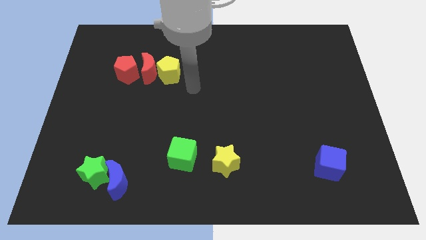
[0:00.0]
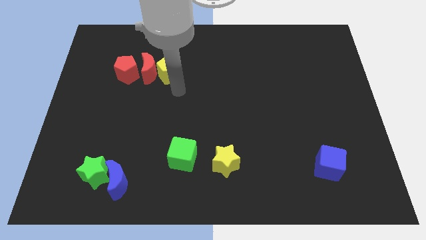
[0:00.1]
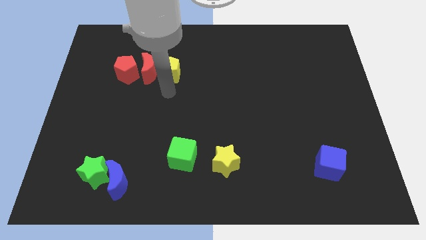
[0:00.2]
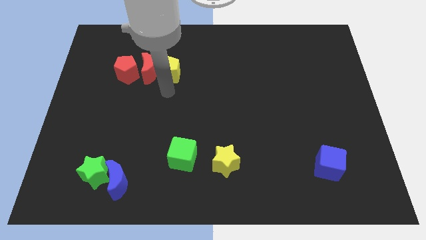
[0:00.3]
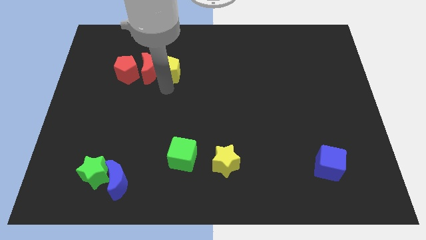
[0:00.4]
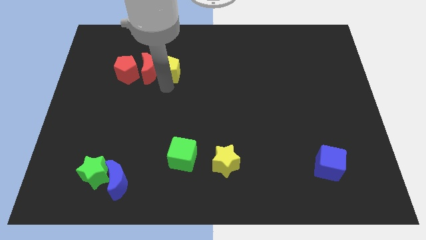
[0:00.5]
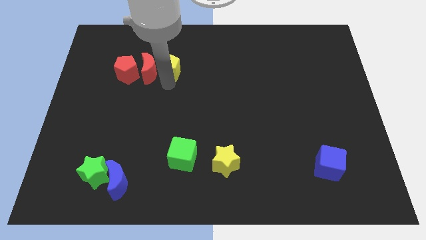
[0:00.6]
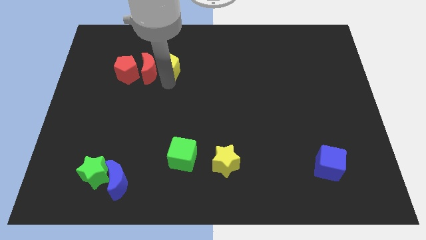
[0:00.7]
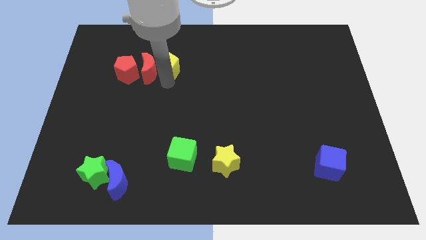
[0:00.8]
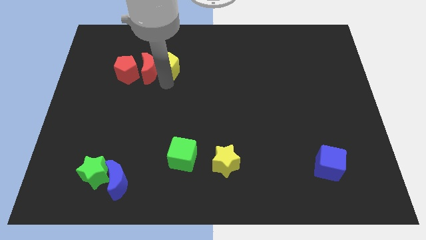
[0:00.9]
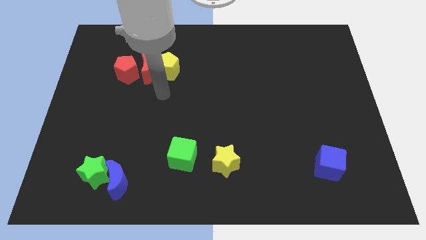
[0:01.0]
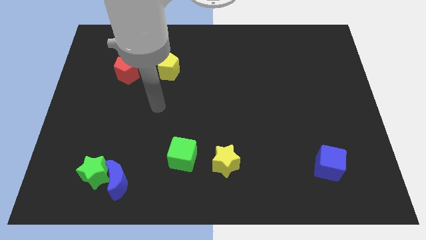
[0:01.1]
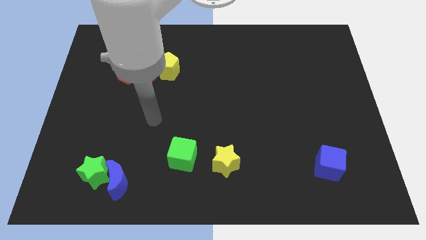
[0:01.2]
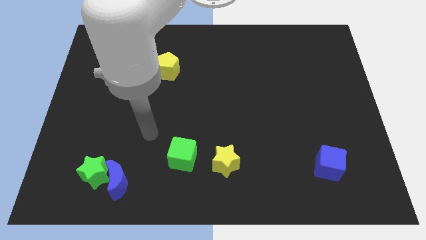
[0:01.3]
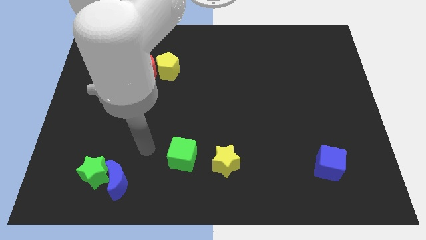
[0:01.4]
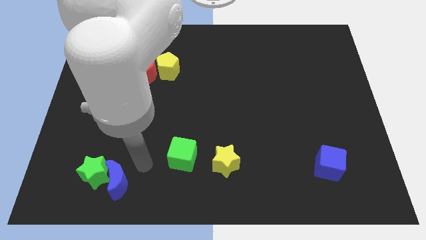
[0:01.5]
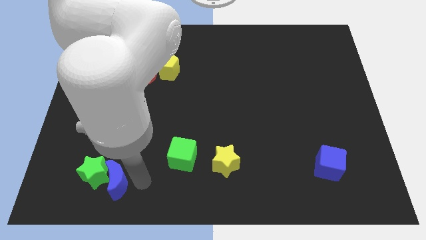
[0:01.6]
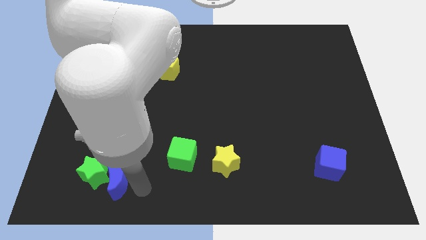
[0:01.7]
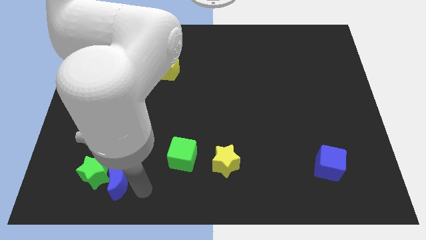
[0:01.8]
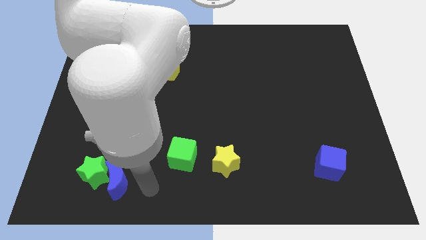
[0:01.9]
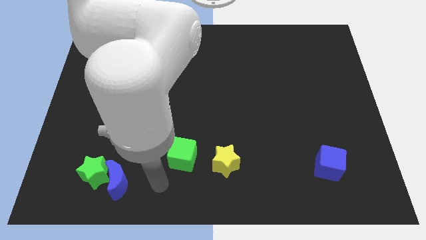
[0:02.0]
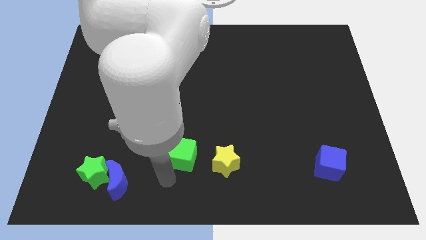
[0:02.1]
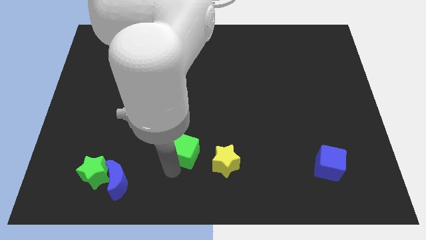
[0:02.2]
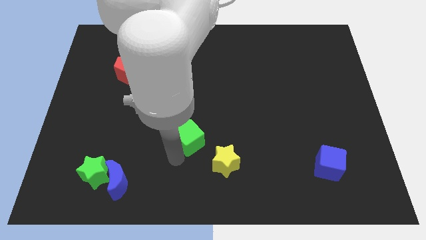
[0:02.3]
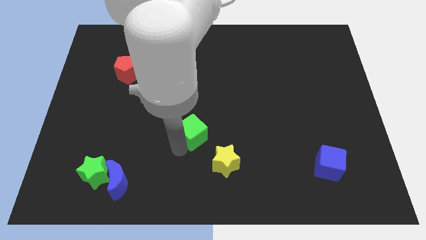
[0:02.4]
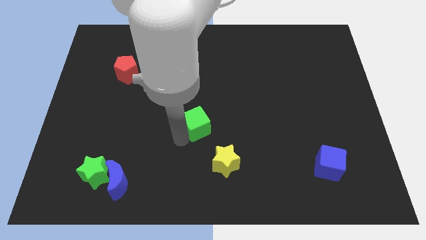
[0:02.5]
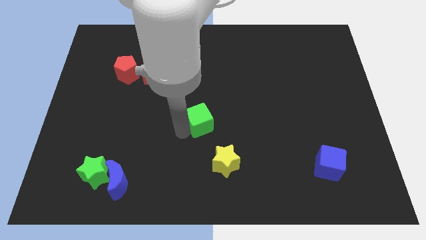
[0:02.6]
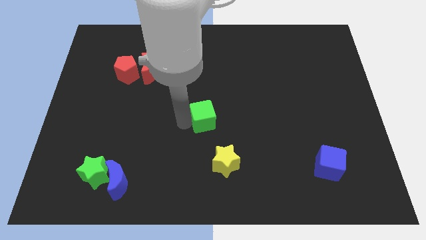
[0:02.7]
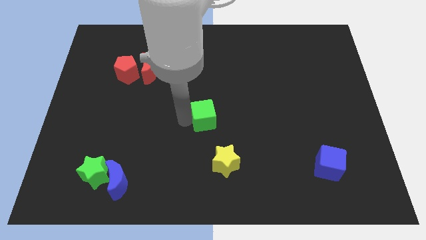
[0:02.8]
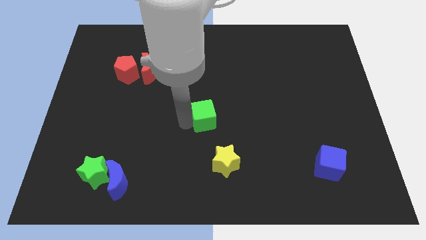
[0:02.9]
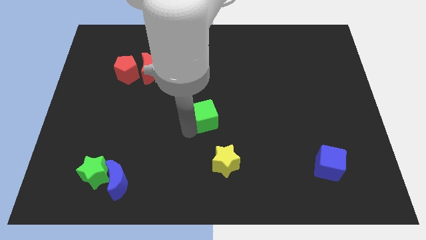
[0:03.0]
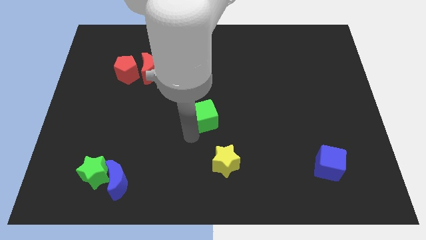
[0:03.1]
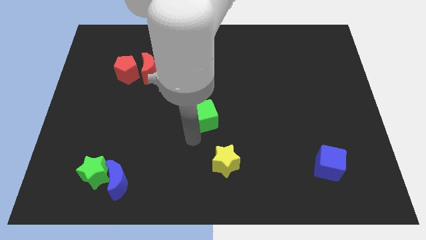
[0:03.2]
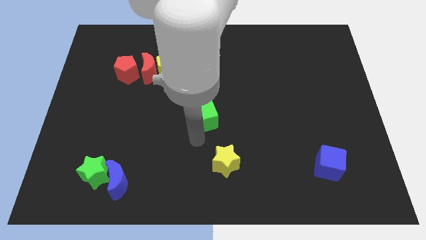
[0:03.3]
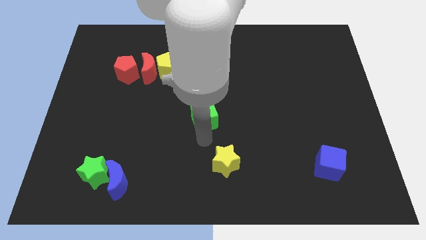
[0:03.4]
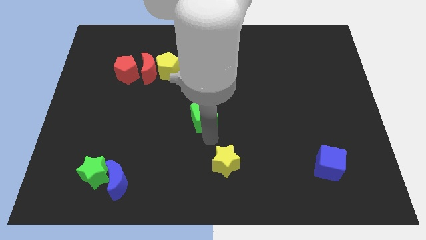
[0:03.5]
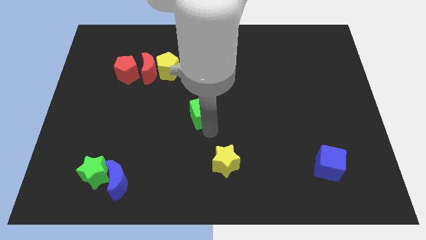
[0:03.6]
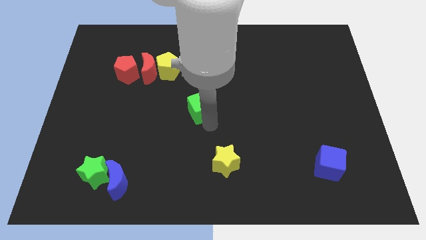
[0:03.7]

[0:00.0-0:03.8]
move the green cube at the center of the board

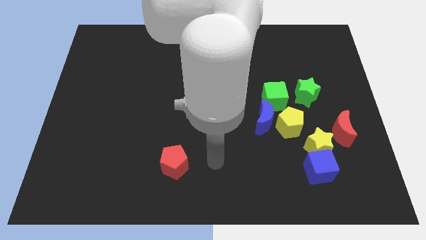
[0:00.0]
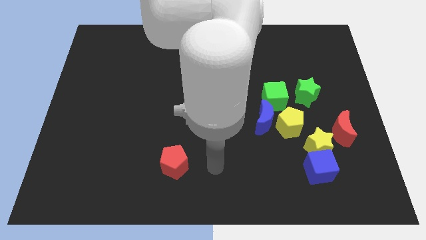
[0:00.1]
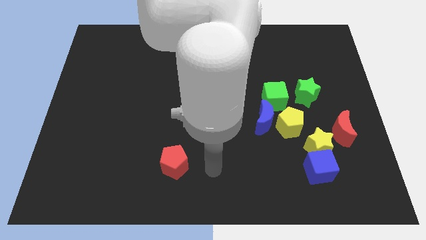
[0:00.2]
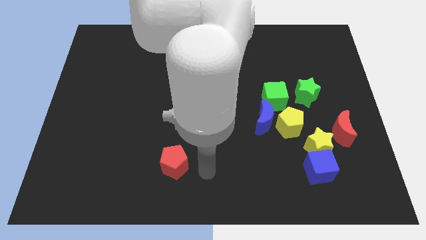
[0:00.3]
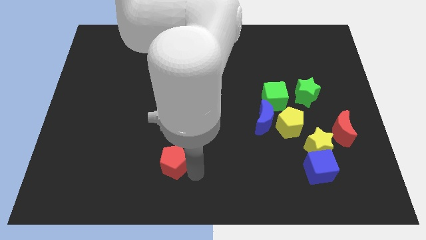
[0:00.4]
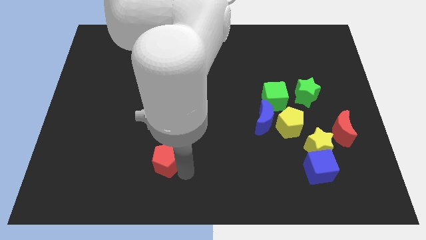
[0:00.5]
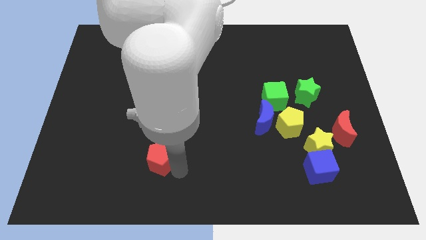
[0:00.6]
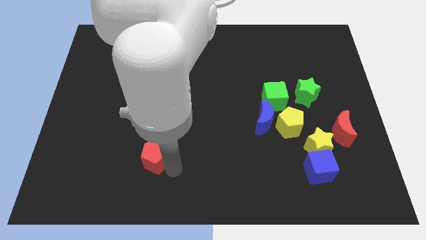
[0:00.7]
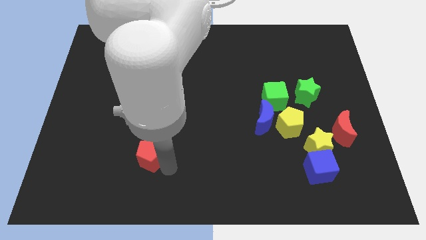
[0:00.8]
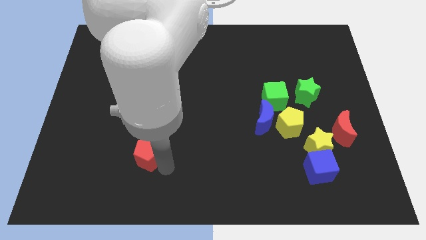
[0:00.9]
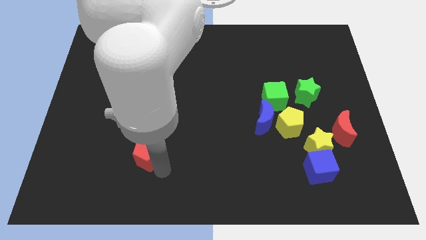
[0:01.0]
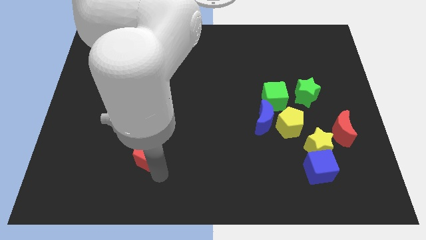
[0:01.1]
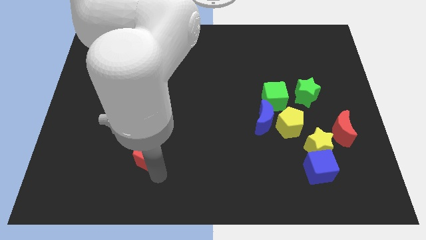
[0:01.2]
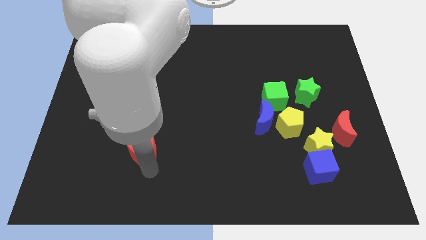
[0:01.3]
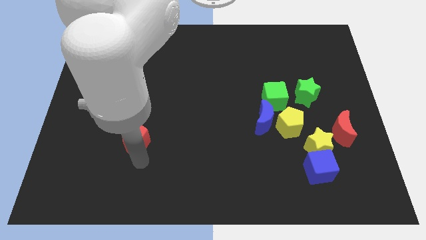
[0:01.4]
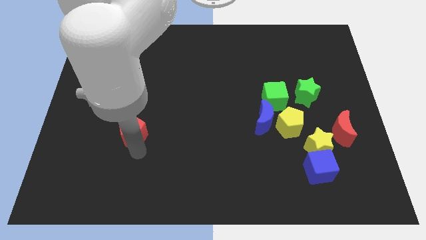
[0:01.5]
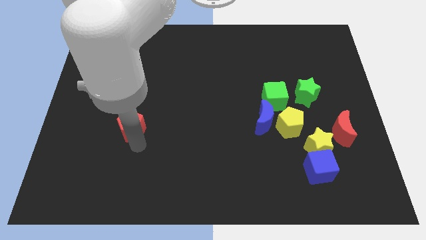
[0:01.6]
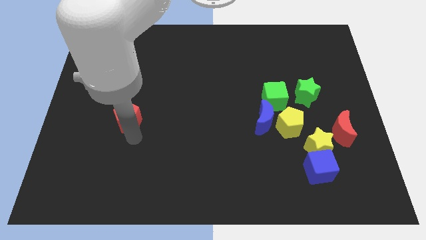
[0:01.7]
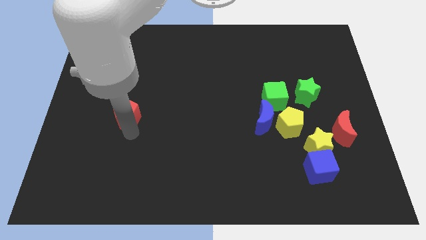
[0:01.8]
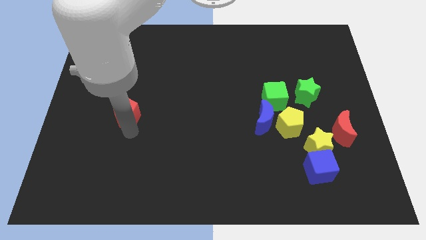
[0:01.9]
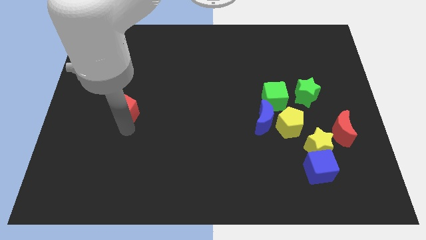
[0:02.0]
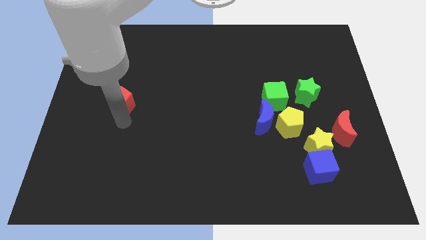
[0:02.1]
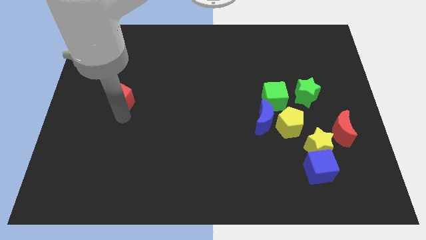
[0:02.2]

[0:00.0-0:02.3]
move the red pentagon upwards

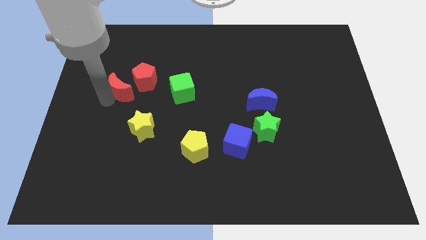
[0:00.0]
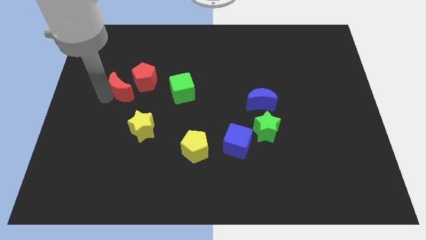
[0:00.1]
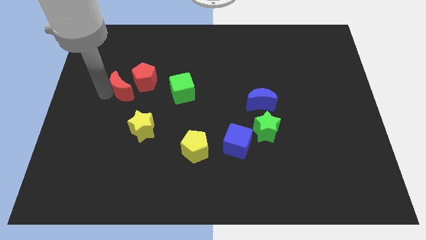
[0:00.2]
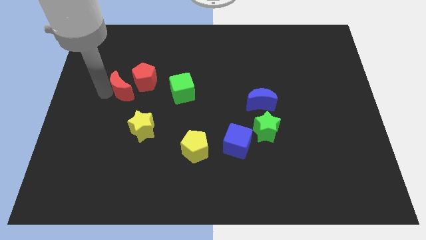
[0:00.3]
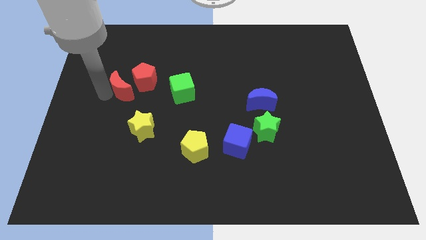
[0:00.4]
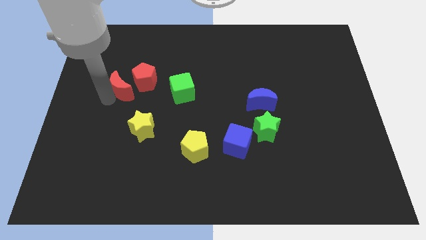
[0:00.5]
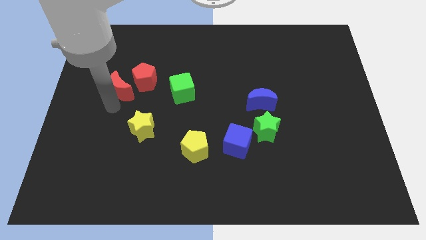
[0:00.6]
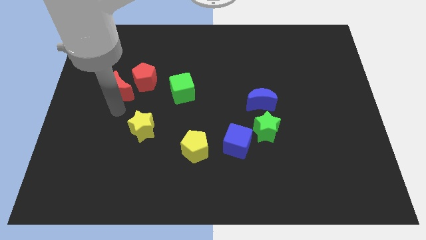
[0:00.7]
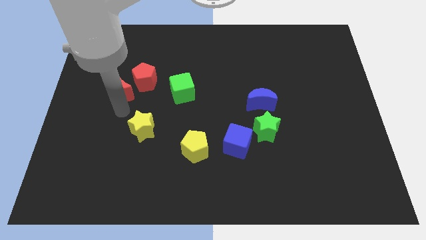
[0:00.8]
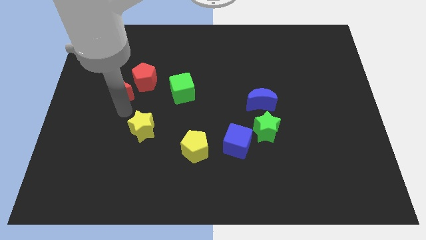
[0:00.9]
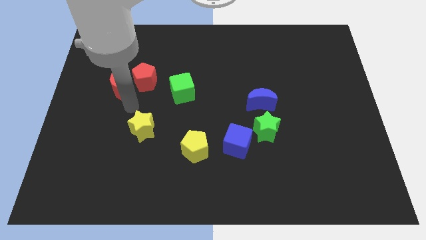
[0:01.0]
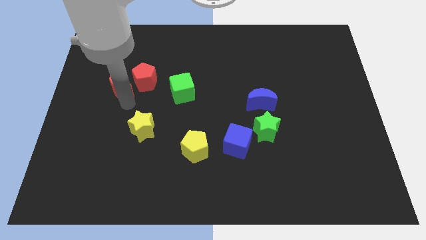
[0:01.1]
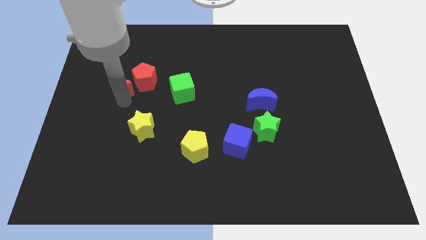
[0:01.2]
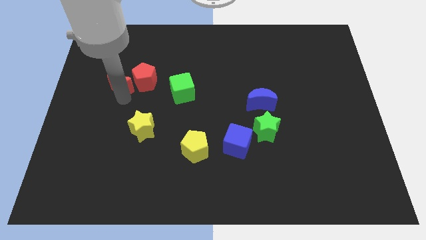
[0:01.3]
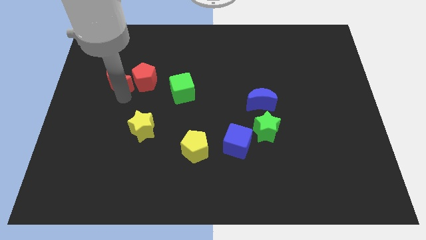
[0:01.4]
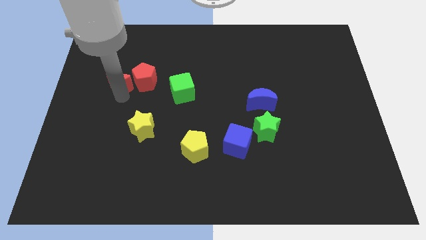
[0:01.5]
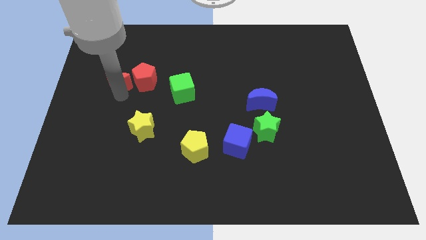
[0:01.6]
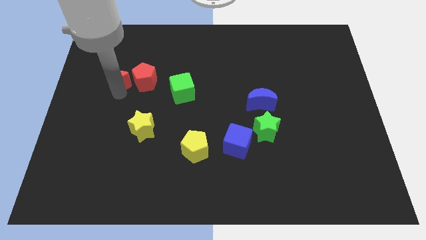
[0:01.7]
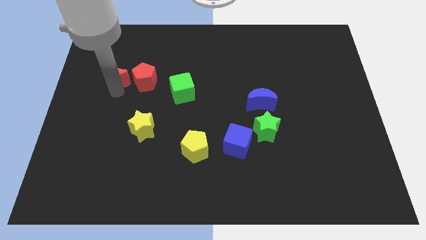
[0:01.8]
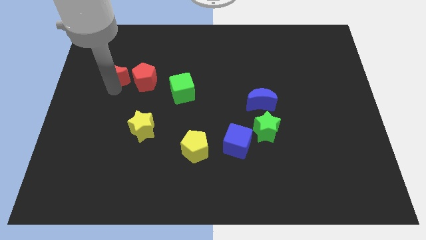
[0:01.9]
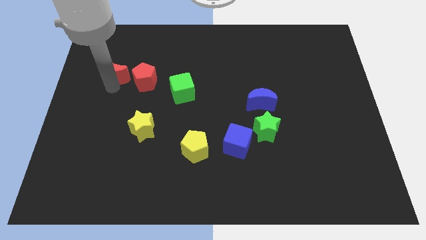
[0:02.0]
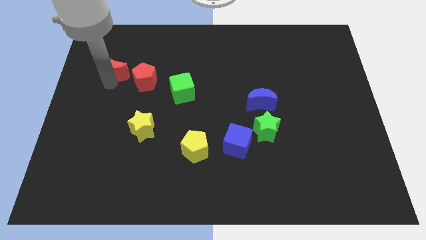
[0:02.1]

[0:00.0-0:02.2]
place the red moon to the left side of red pentagon

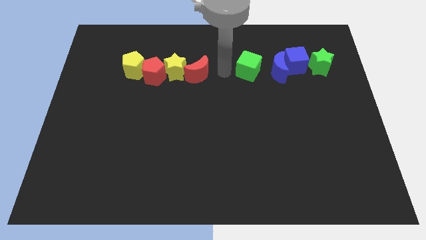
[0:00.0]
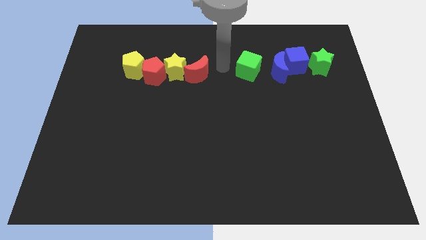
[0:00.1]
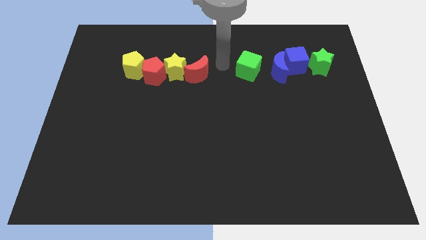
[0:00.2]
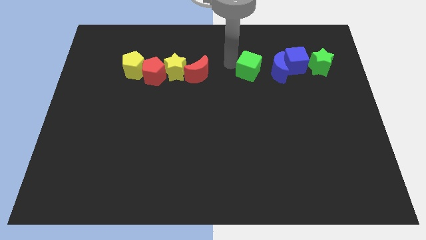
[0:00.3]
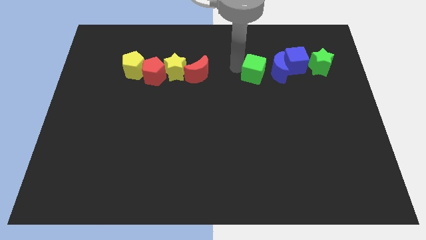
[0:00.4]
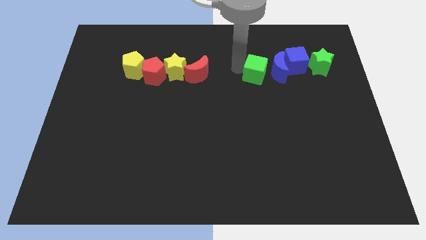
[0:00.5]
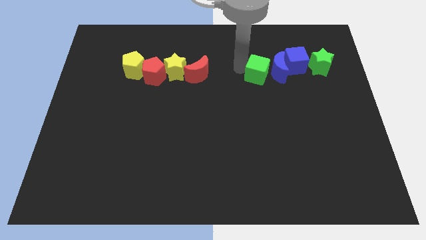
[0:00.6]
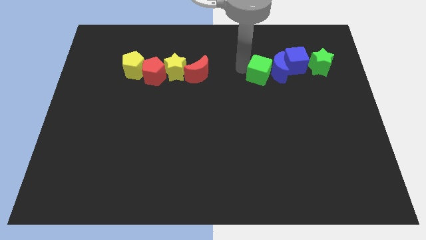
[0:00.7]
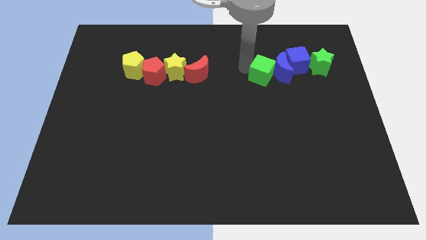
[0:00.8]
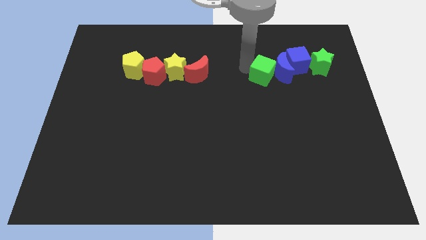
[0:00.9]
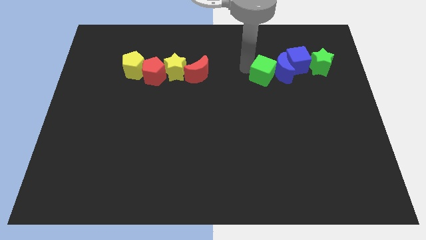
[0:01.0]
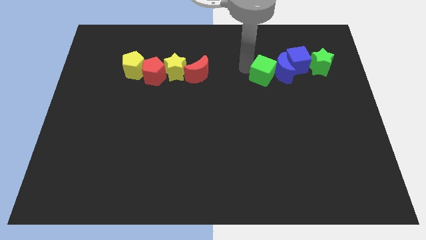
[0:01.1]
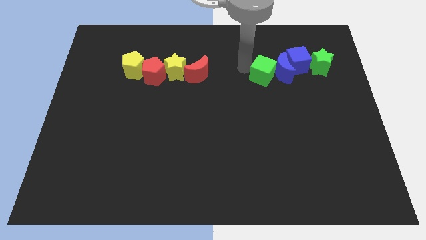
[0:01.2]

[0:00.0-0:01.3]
place green cube near blue crescent
